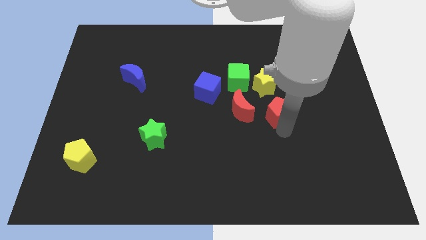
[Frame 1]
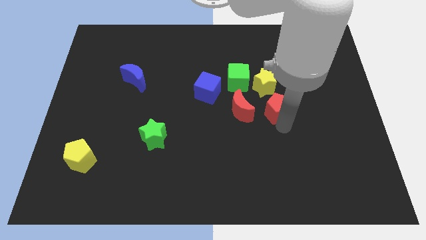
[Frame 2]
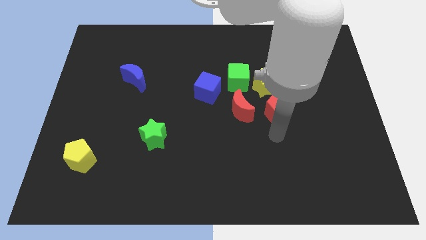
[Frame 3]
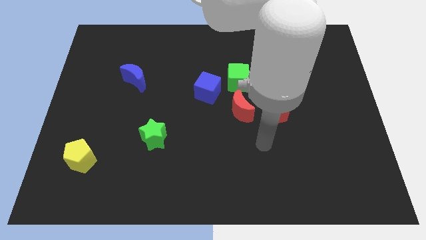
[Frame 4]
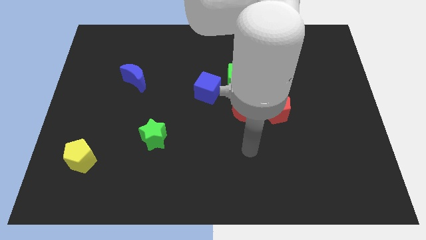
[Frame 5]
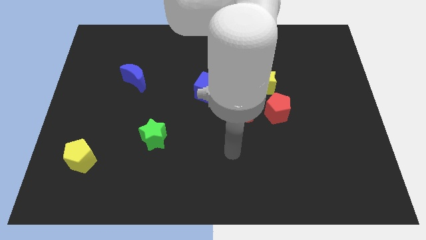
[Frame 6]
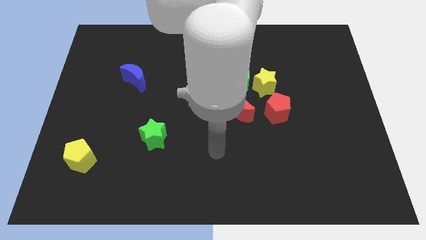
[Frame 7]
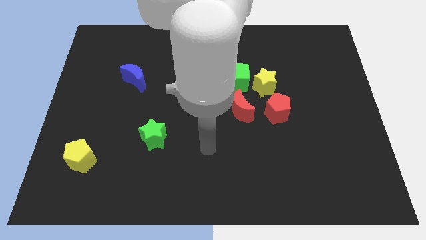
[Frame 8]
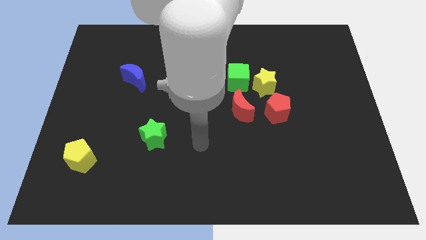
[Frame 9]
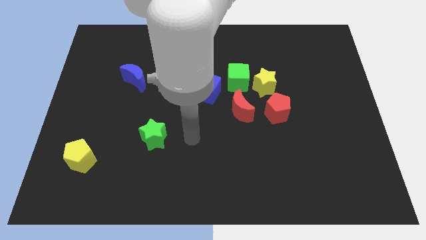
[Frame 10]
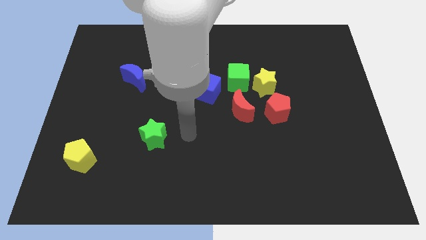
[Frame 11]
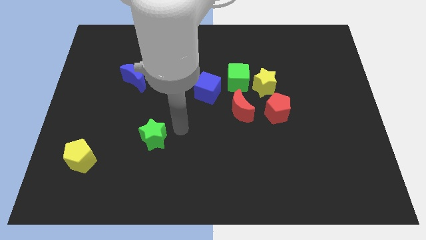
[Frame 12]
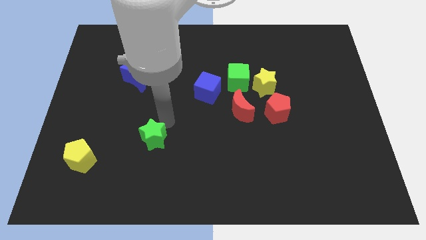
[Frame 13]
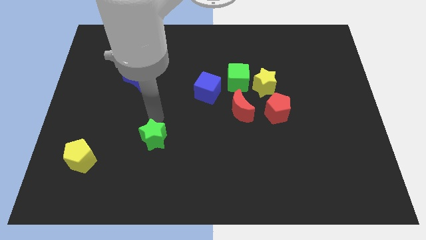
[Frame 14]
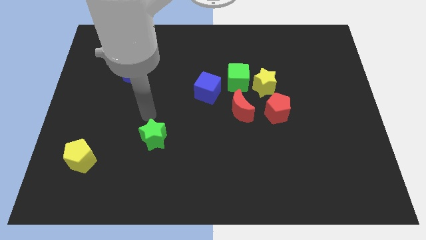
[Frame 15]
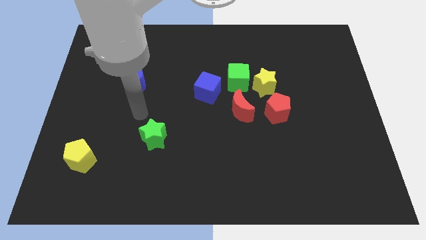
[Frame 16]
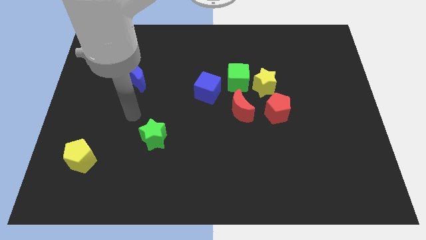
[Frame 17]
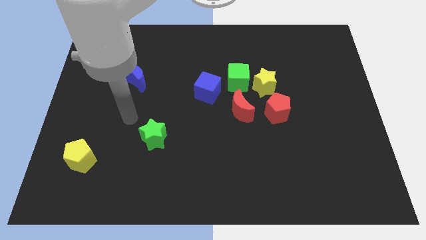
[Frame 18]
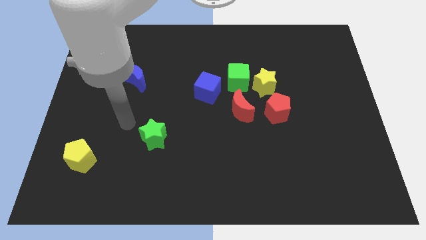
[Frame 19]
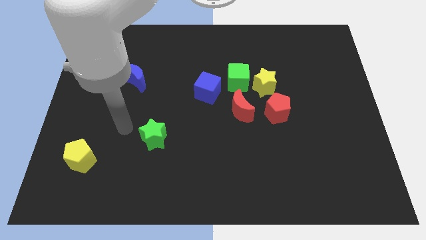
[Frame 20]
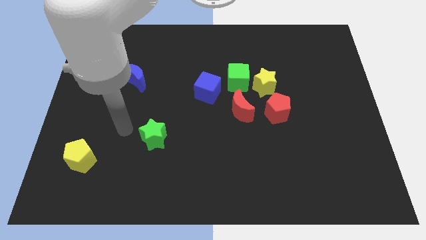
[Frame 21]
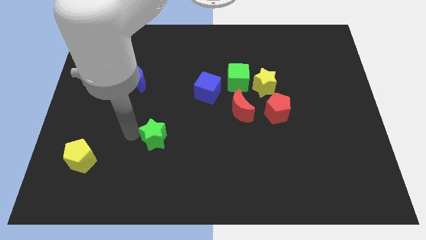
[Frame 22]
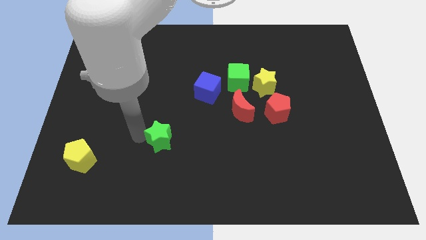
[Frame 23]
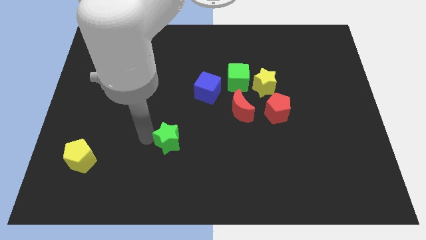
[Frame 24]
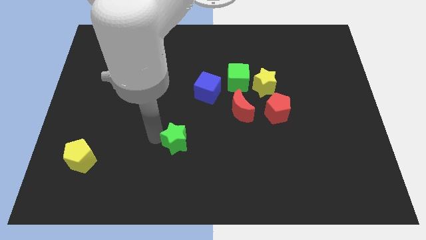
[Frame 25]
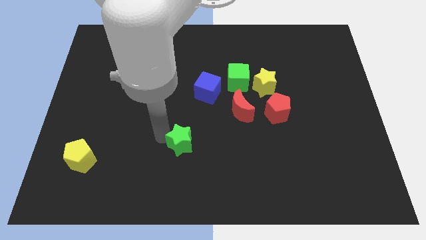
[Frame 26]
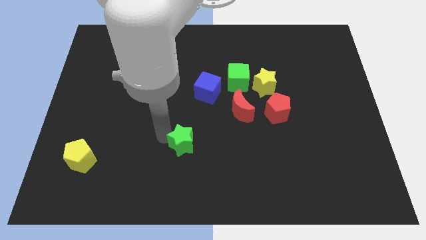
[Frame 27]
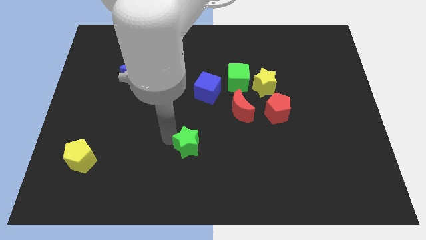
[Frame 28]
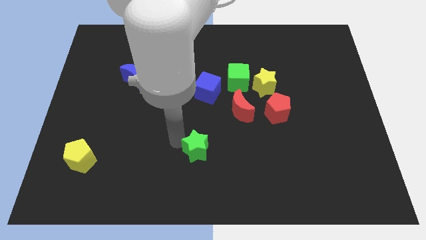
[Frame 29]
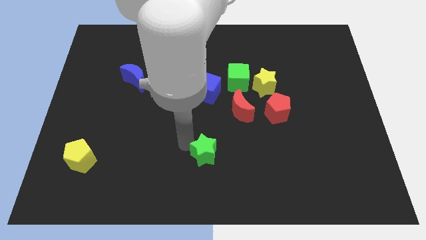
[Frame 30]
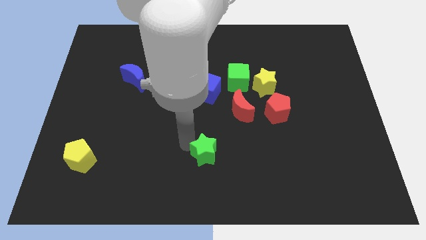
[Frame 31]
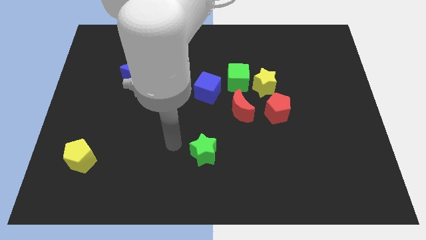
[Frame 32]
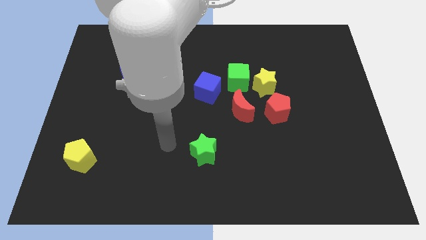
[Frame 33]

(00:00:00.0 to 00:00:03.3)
slightly push the green star to the bottom of the board

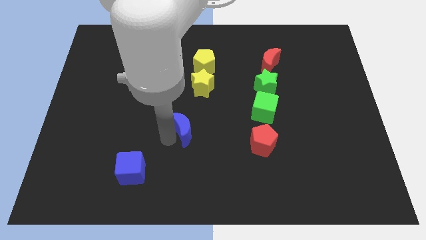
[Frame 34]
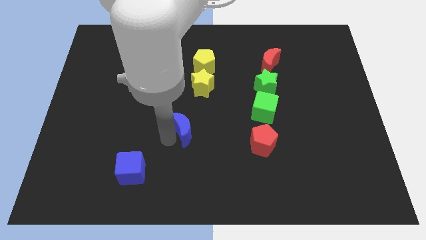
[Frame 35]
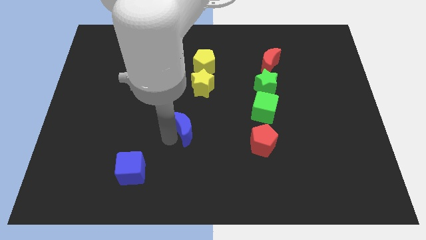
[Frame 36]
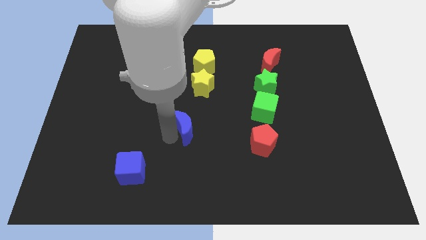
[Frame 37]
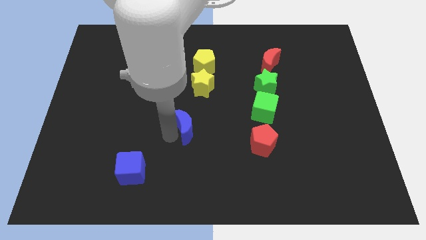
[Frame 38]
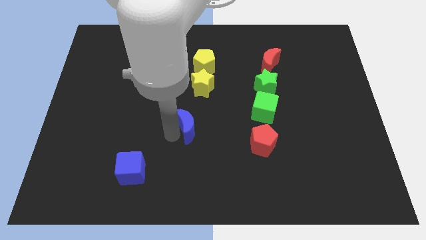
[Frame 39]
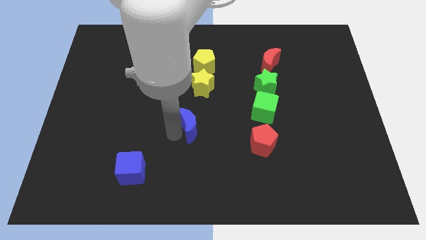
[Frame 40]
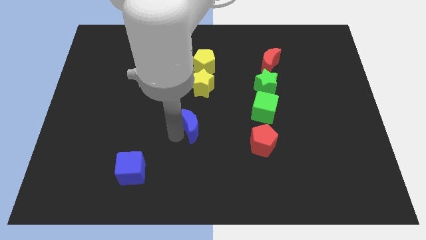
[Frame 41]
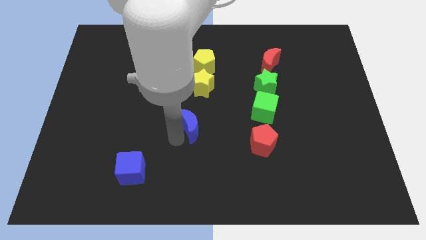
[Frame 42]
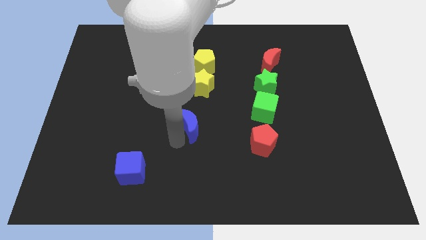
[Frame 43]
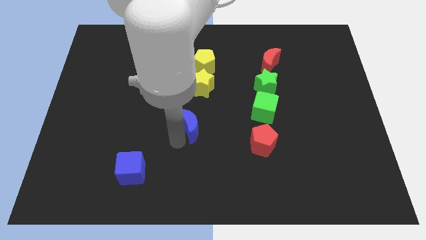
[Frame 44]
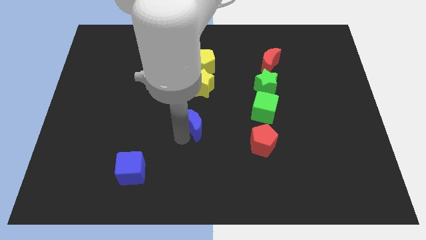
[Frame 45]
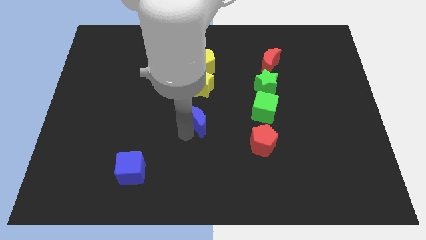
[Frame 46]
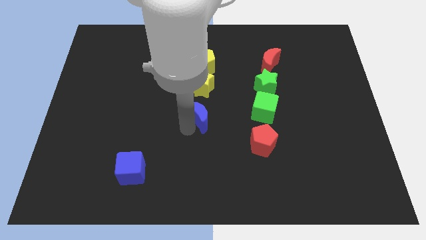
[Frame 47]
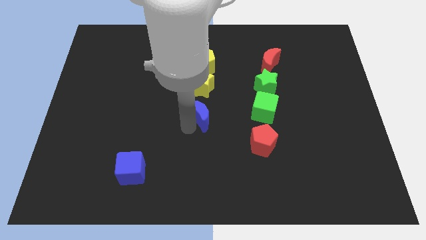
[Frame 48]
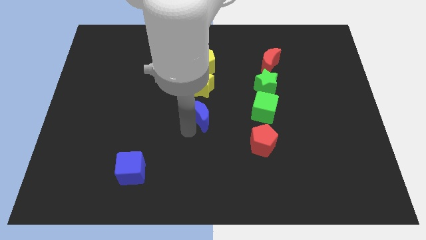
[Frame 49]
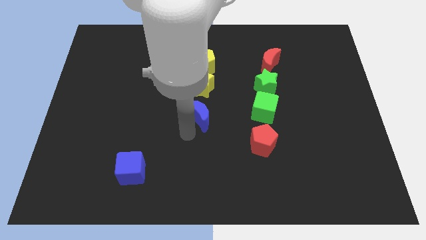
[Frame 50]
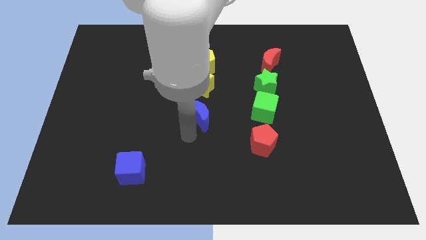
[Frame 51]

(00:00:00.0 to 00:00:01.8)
move blue moon to the center of the board

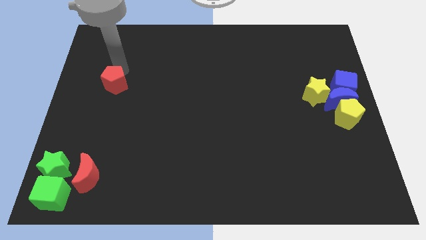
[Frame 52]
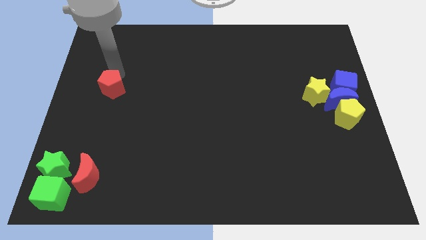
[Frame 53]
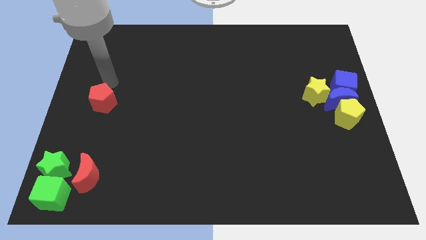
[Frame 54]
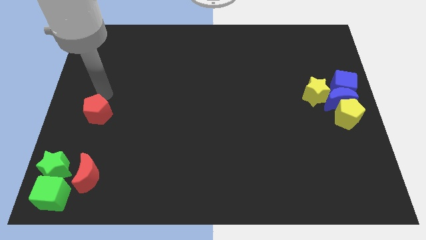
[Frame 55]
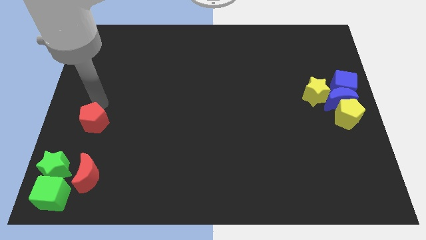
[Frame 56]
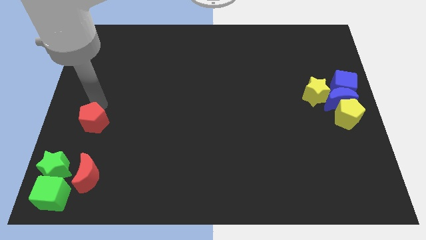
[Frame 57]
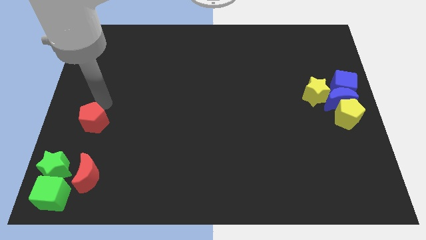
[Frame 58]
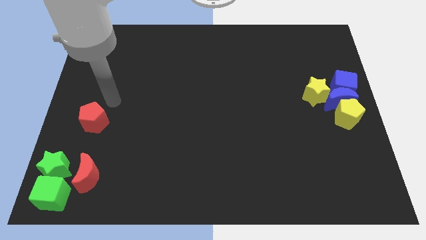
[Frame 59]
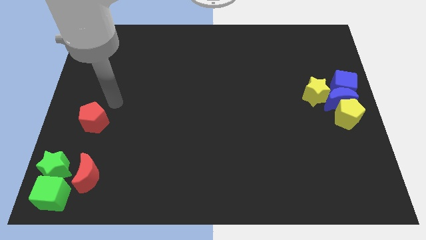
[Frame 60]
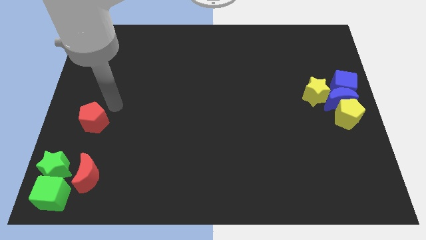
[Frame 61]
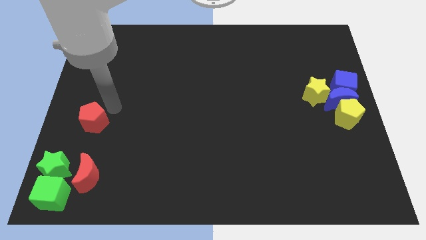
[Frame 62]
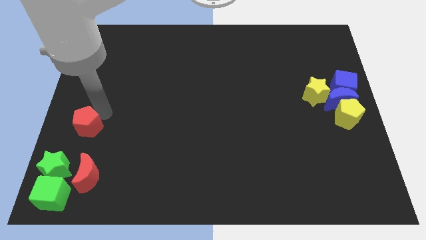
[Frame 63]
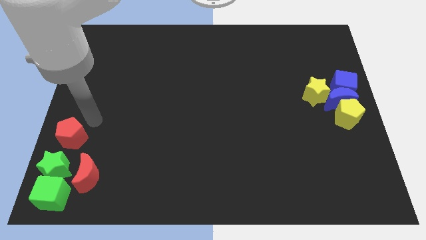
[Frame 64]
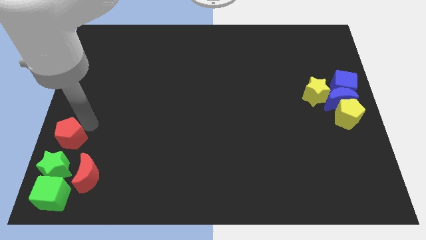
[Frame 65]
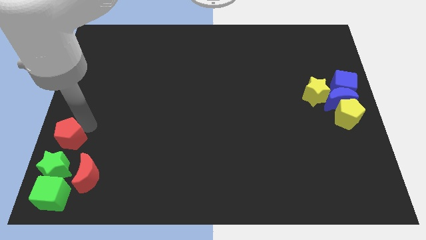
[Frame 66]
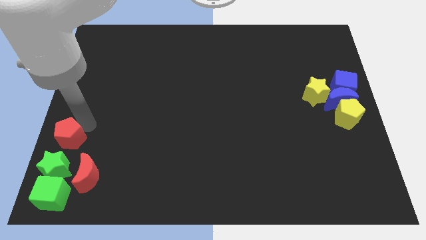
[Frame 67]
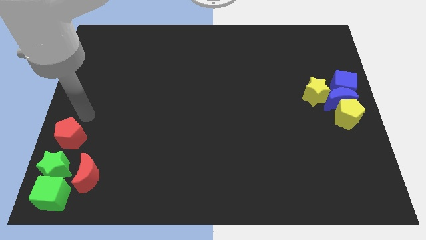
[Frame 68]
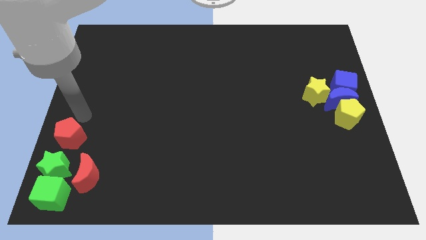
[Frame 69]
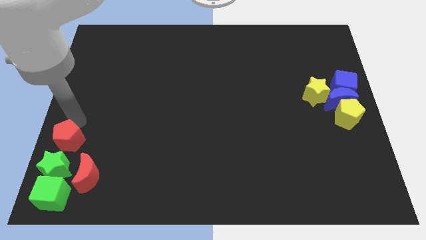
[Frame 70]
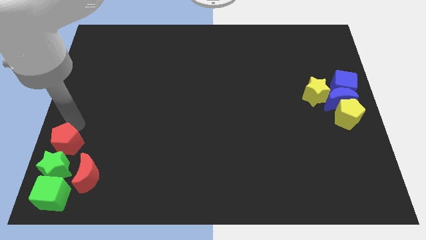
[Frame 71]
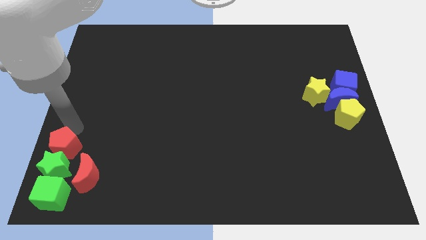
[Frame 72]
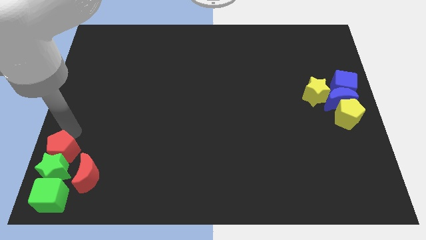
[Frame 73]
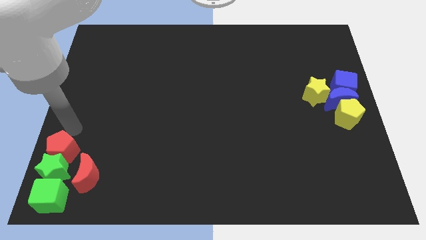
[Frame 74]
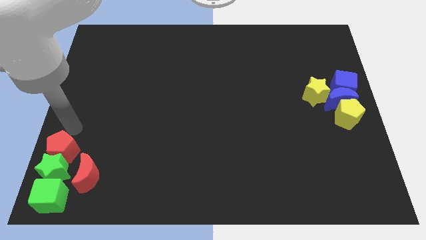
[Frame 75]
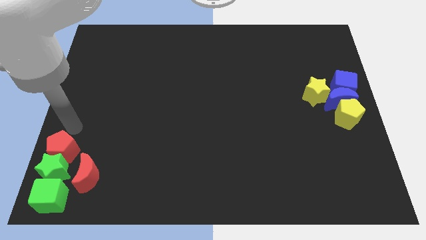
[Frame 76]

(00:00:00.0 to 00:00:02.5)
push the red pentagon into the green star

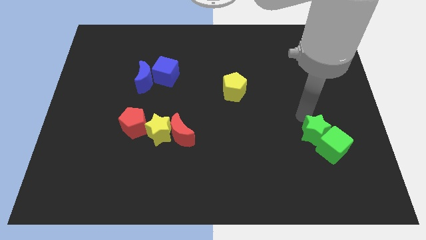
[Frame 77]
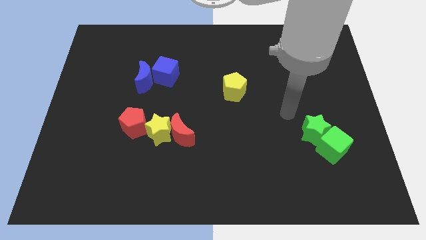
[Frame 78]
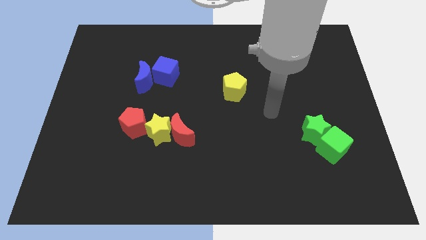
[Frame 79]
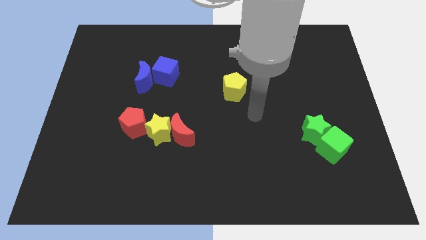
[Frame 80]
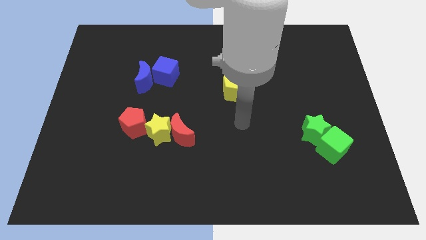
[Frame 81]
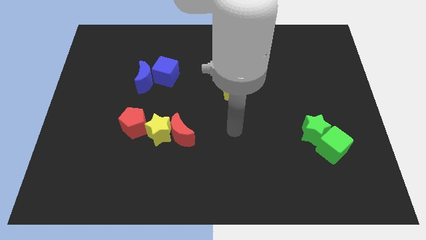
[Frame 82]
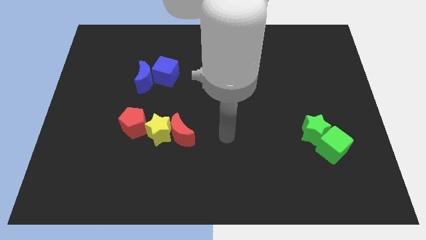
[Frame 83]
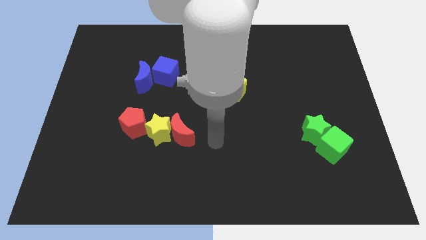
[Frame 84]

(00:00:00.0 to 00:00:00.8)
point your arm at the right side of the red crescent

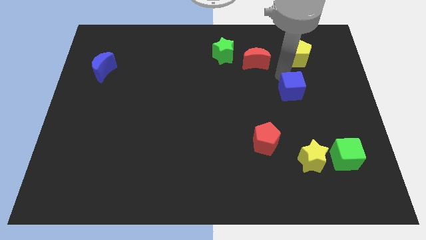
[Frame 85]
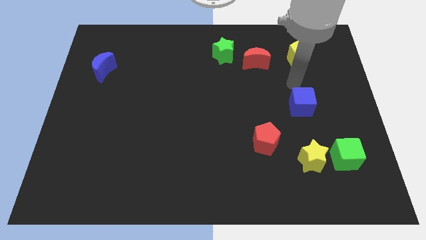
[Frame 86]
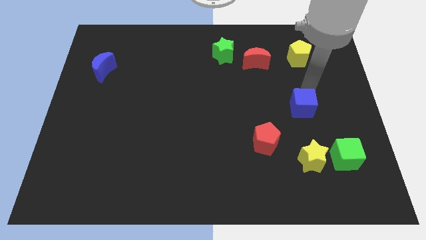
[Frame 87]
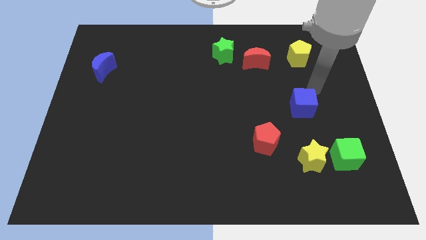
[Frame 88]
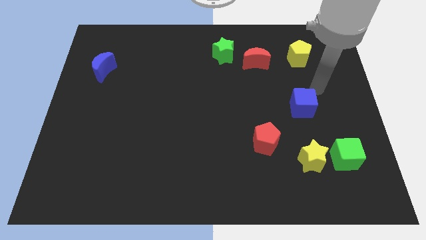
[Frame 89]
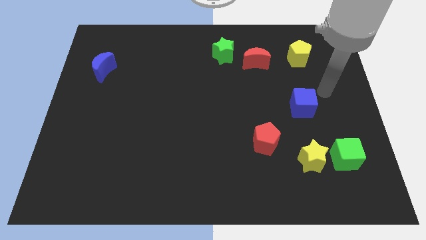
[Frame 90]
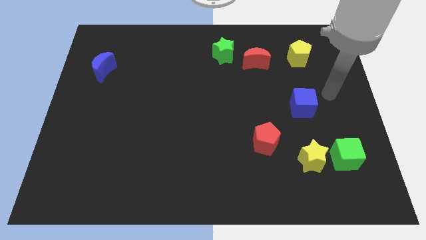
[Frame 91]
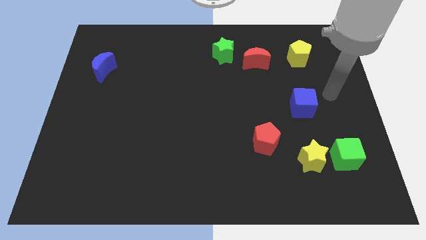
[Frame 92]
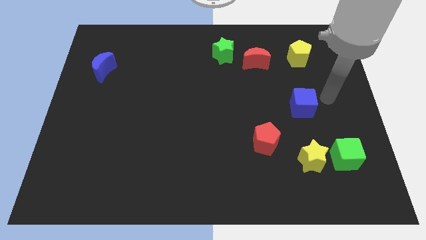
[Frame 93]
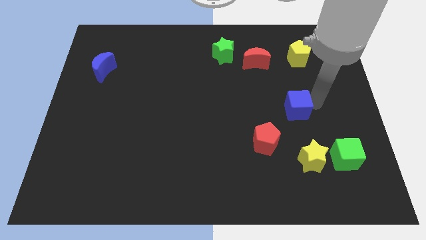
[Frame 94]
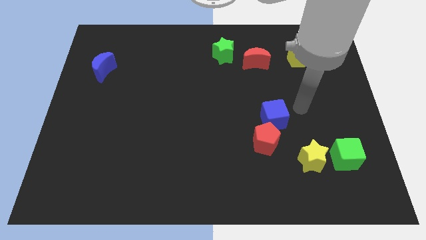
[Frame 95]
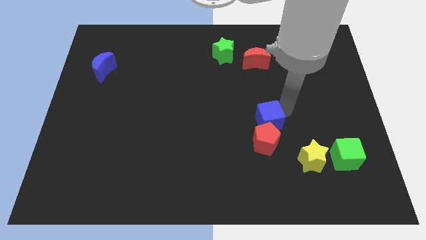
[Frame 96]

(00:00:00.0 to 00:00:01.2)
place the blue cube at the top of red pentagon
